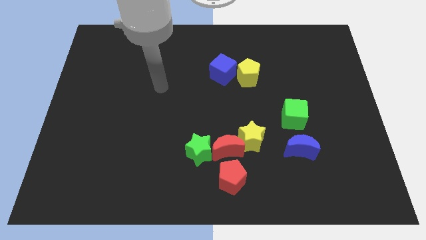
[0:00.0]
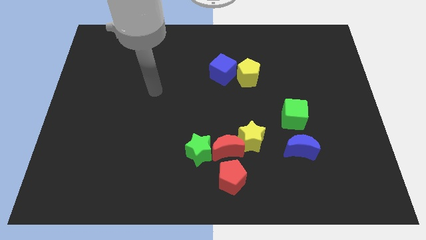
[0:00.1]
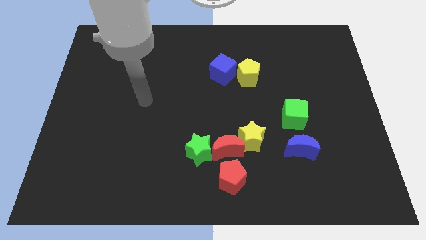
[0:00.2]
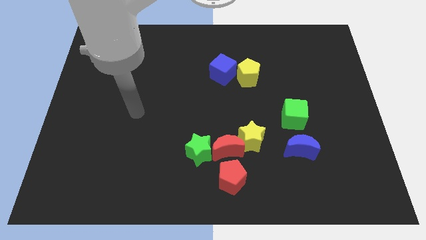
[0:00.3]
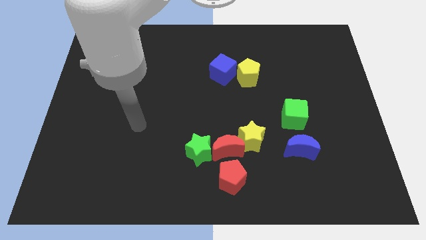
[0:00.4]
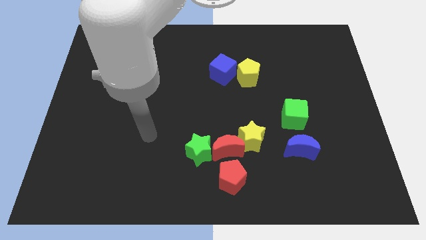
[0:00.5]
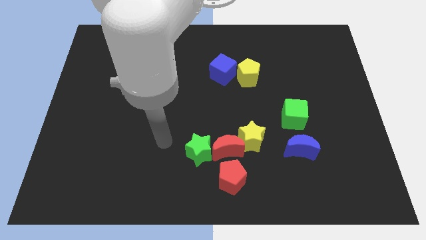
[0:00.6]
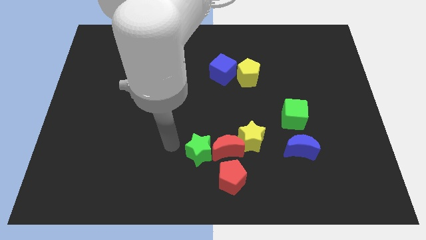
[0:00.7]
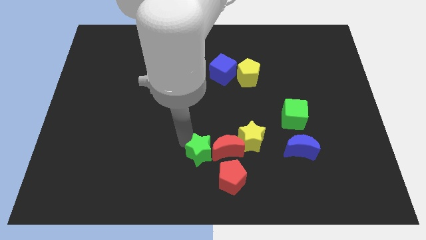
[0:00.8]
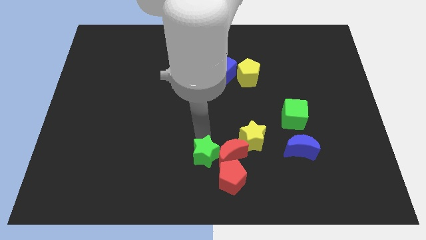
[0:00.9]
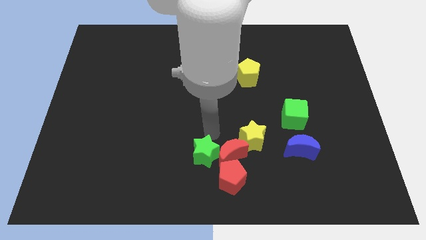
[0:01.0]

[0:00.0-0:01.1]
push the green star into the red crescent

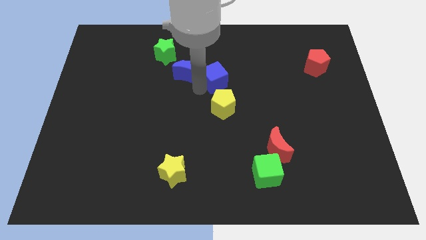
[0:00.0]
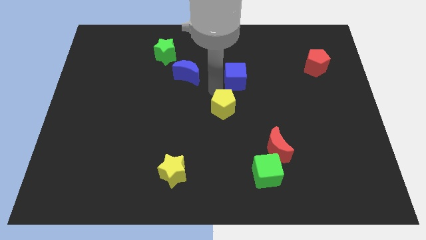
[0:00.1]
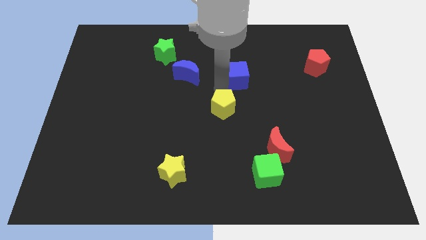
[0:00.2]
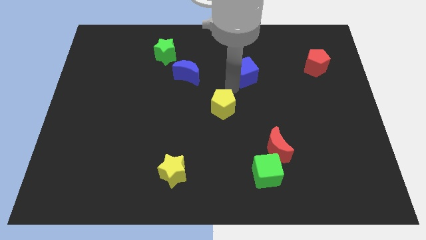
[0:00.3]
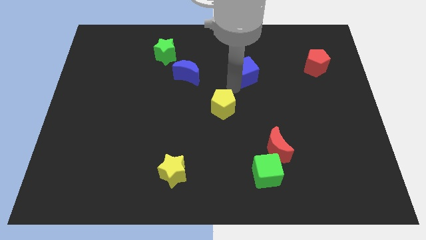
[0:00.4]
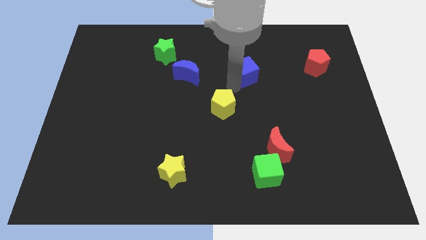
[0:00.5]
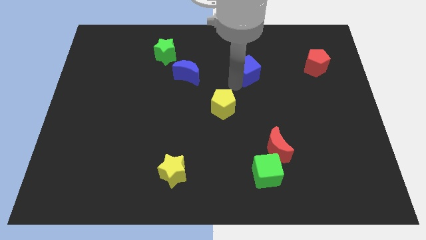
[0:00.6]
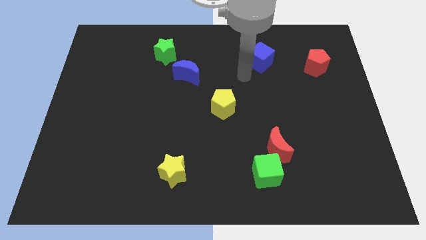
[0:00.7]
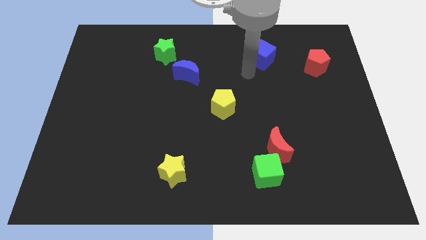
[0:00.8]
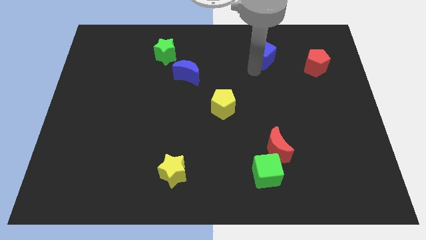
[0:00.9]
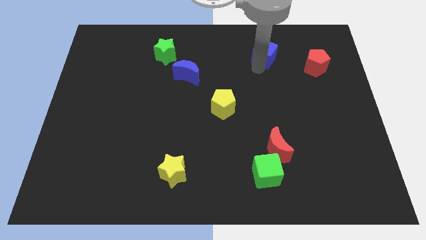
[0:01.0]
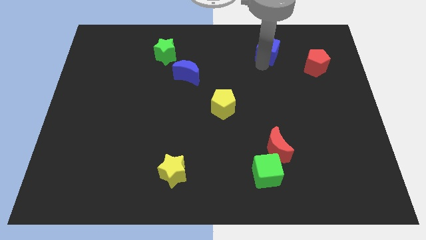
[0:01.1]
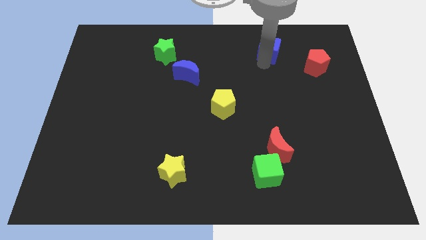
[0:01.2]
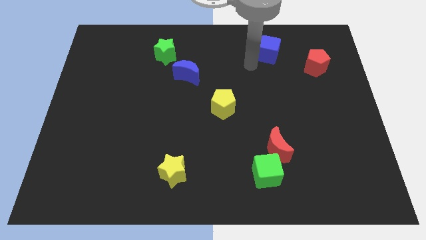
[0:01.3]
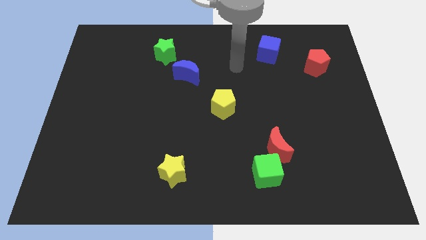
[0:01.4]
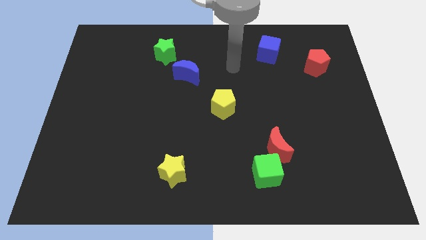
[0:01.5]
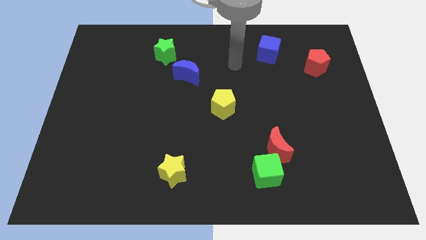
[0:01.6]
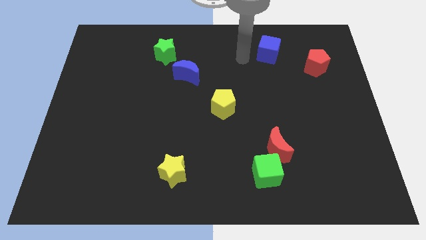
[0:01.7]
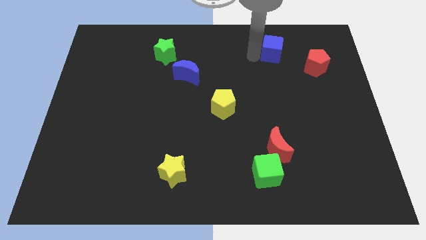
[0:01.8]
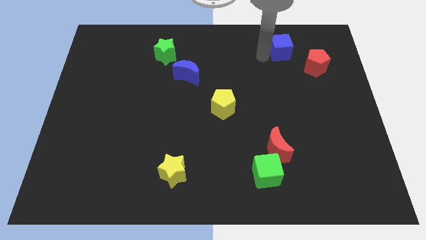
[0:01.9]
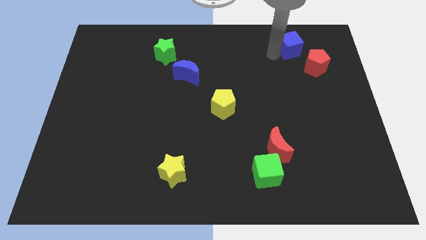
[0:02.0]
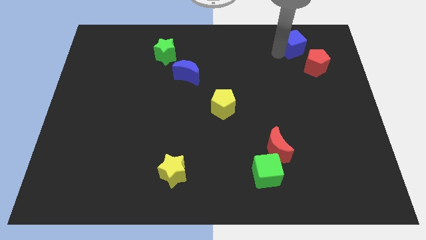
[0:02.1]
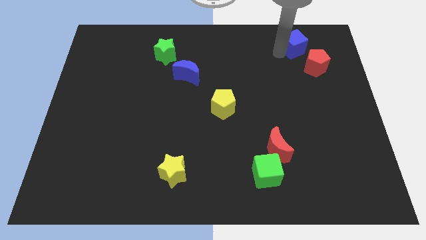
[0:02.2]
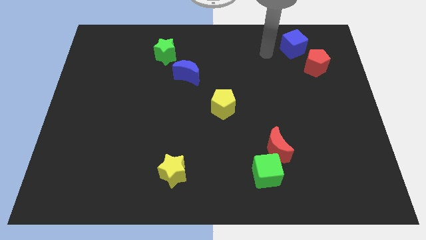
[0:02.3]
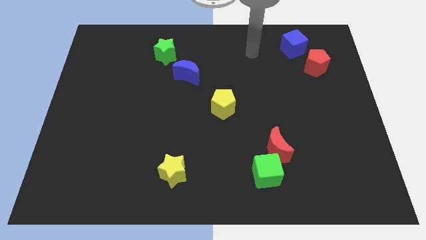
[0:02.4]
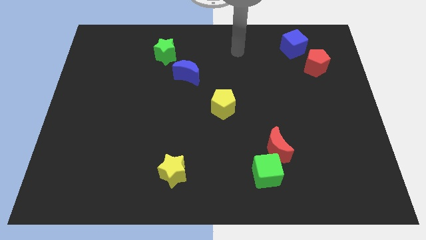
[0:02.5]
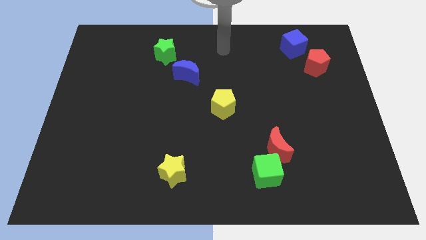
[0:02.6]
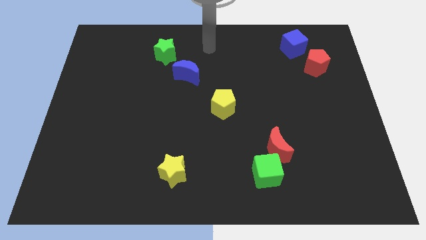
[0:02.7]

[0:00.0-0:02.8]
place blue cube on top of red pentagon

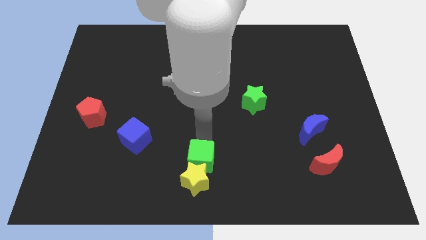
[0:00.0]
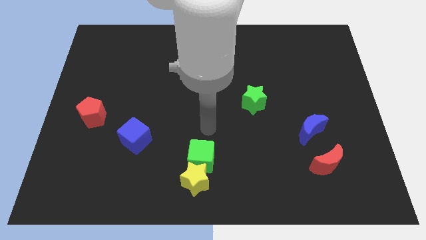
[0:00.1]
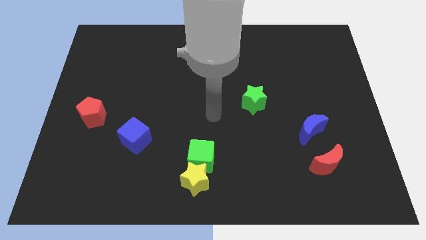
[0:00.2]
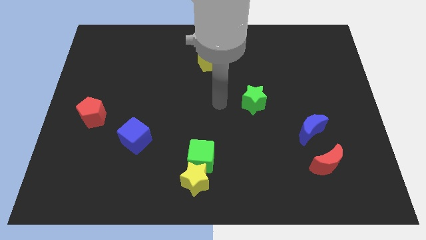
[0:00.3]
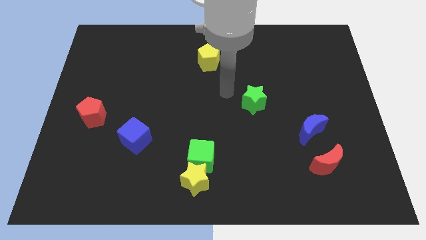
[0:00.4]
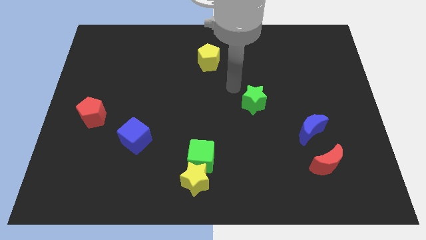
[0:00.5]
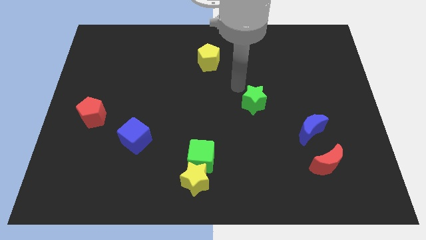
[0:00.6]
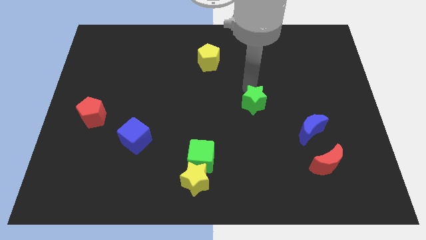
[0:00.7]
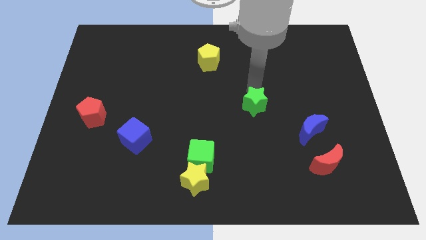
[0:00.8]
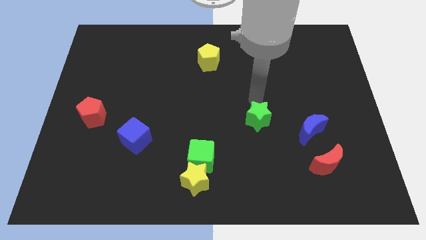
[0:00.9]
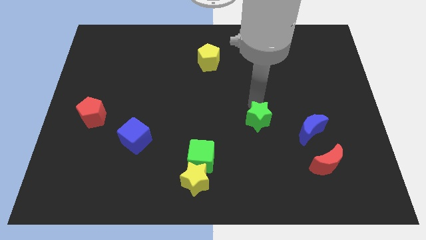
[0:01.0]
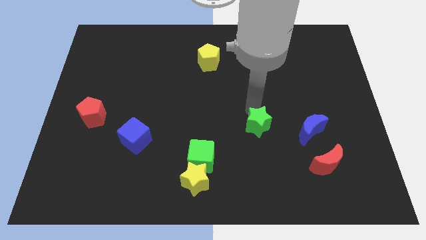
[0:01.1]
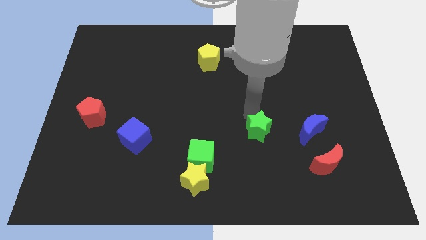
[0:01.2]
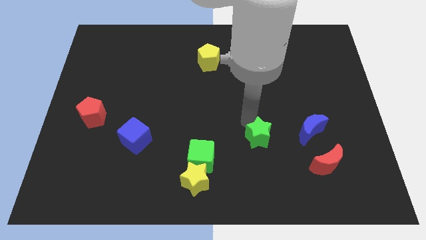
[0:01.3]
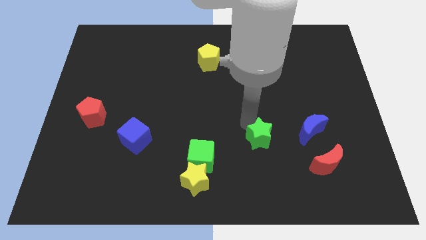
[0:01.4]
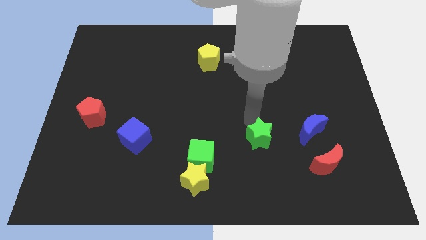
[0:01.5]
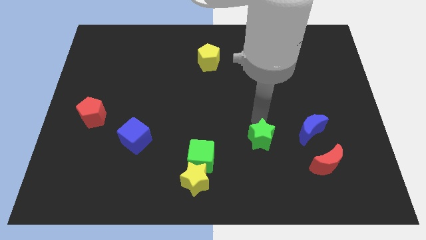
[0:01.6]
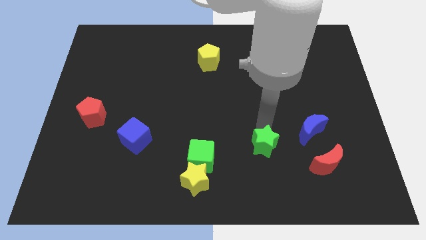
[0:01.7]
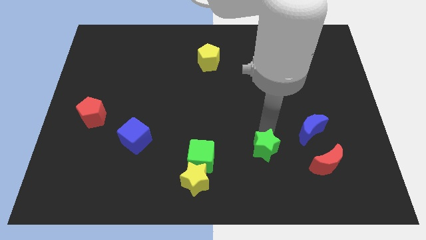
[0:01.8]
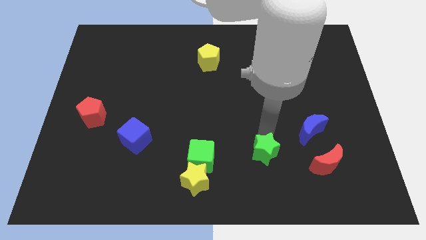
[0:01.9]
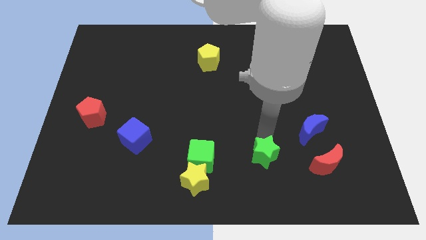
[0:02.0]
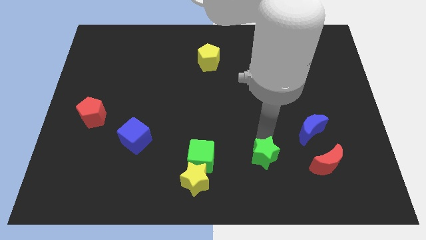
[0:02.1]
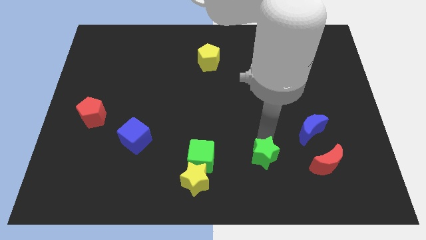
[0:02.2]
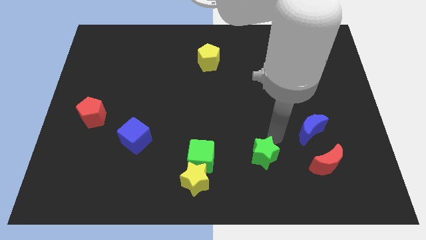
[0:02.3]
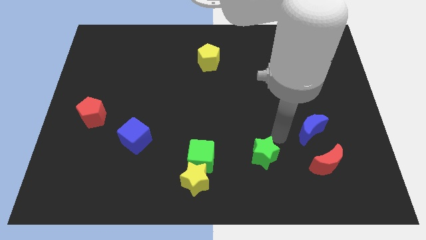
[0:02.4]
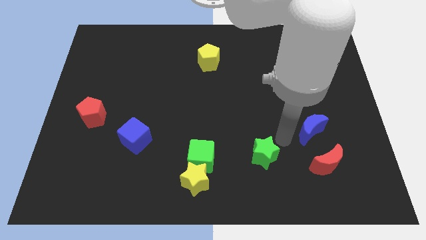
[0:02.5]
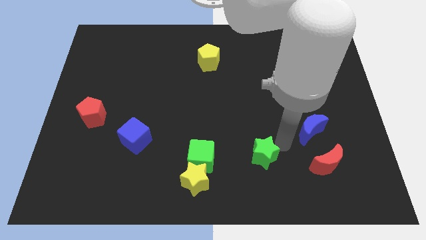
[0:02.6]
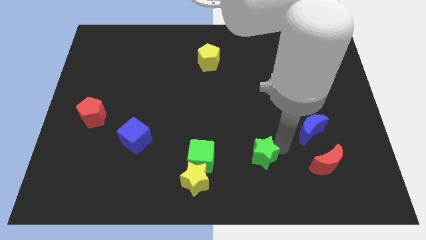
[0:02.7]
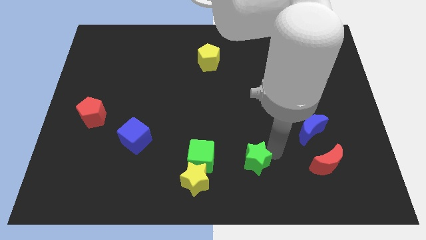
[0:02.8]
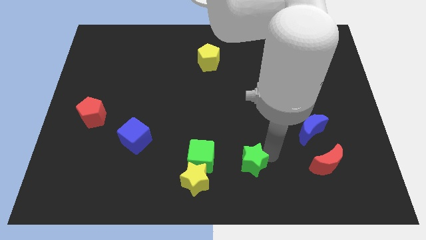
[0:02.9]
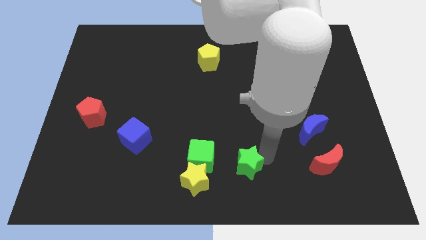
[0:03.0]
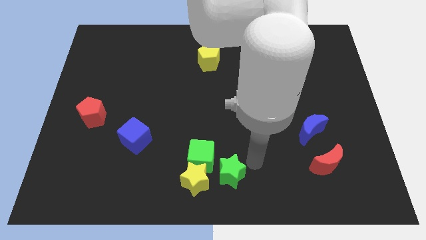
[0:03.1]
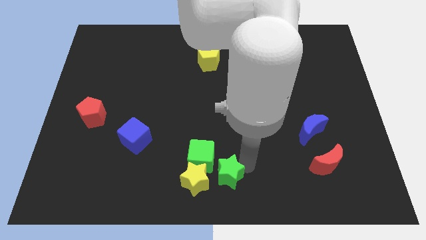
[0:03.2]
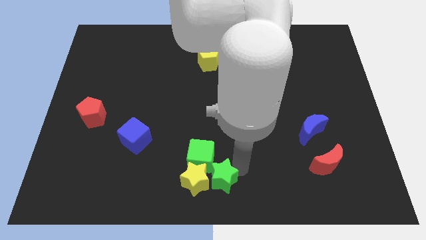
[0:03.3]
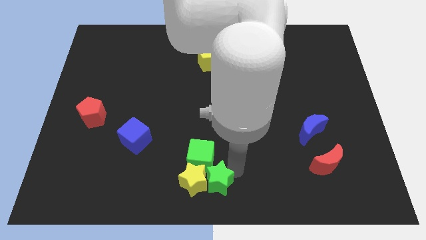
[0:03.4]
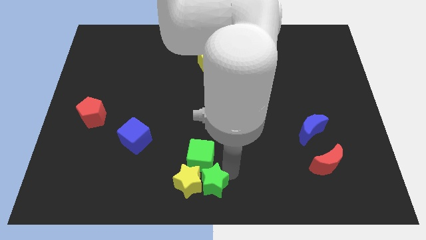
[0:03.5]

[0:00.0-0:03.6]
place the green star to the right side of yellow star

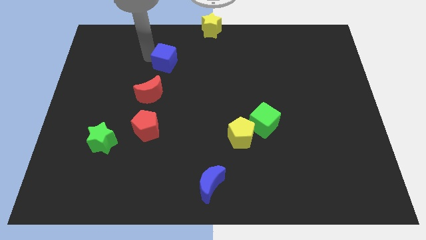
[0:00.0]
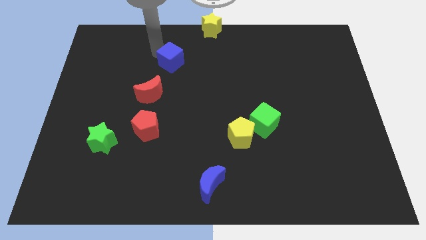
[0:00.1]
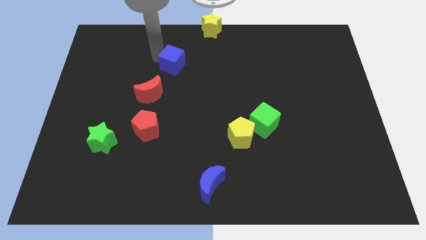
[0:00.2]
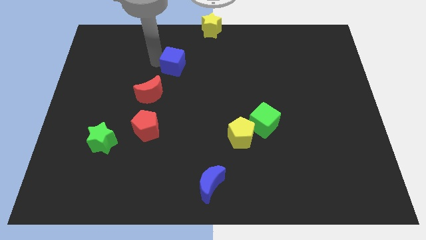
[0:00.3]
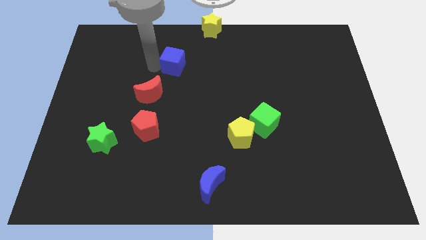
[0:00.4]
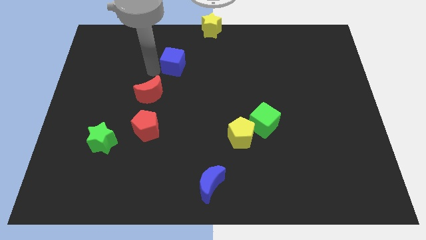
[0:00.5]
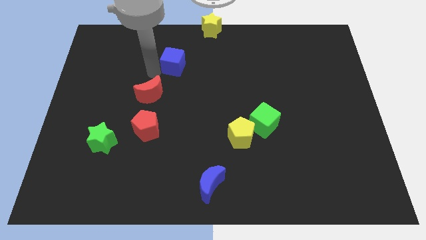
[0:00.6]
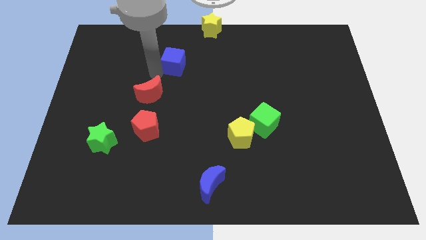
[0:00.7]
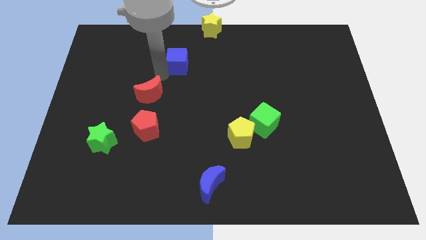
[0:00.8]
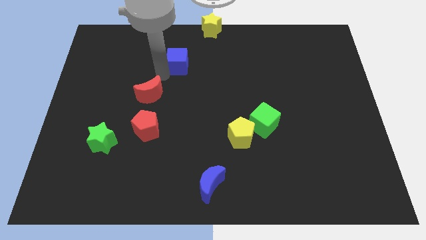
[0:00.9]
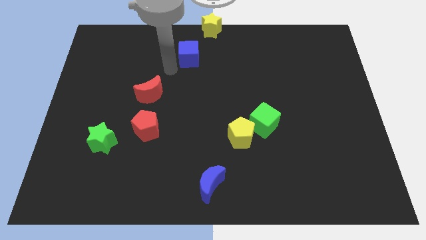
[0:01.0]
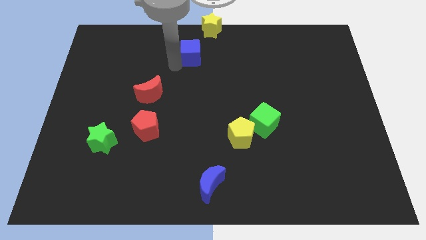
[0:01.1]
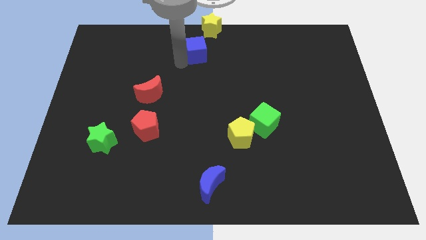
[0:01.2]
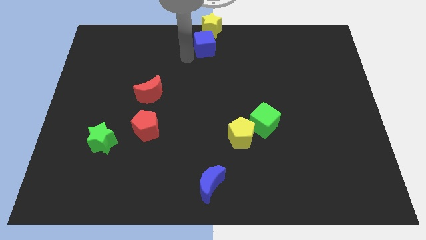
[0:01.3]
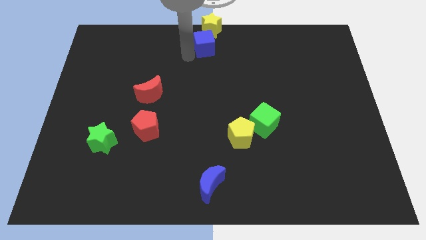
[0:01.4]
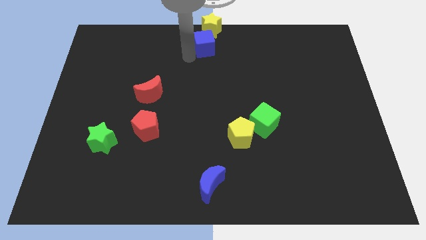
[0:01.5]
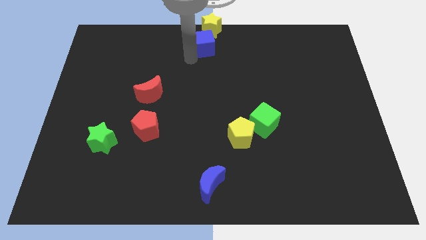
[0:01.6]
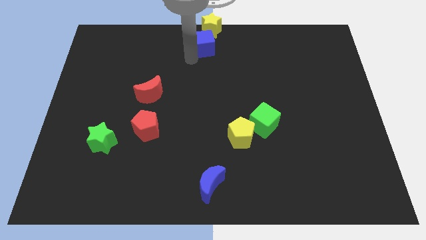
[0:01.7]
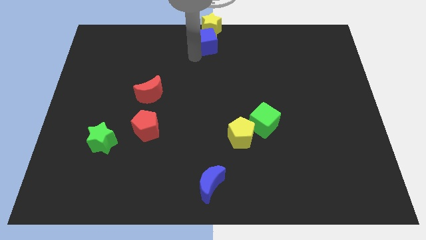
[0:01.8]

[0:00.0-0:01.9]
place the blue cube below the yellow star
